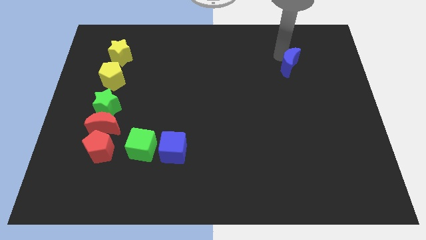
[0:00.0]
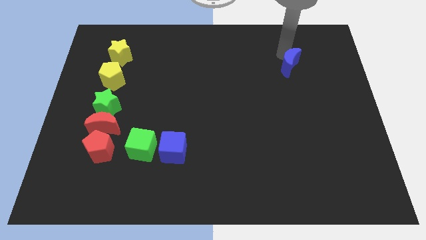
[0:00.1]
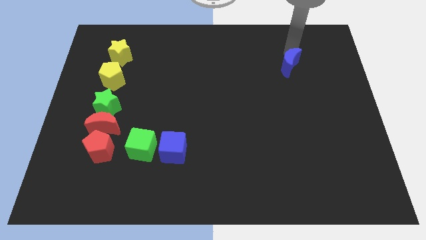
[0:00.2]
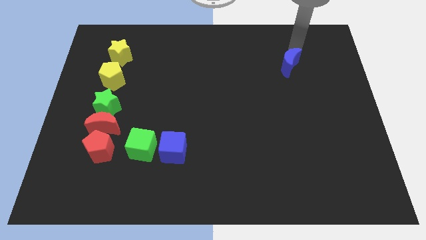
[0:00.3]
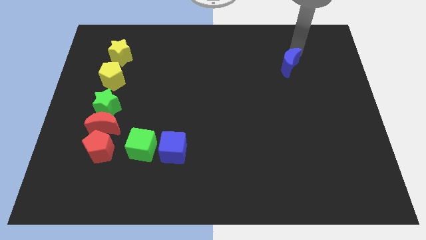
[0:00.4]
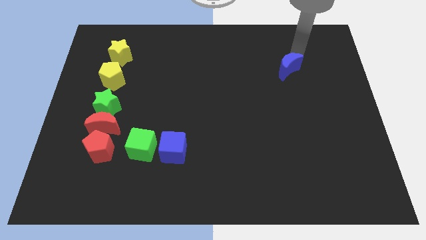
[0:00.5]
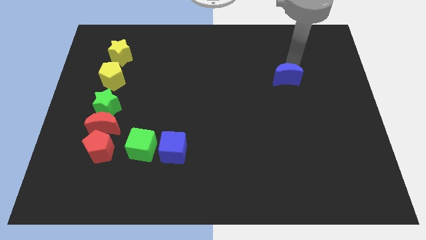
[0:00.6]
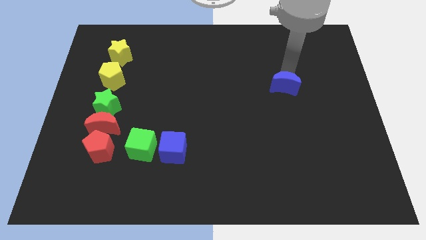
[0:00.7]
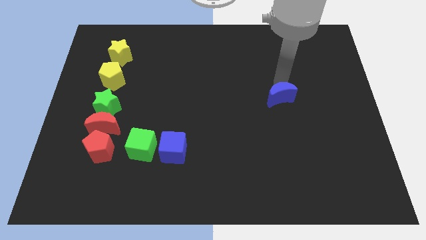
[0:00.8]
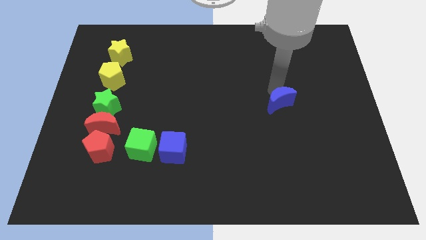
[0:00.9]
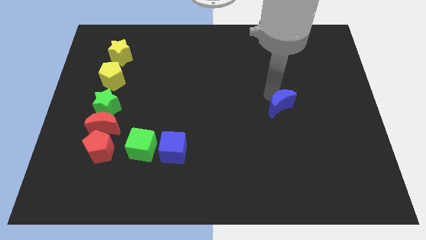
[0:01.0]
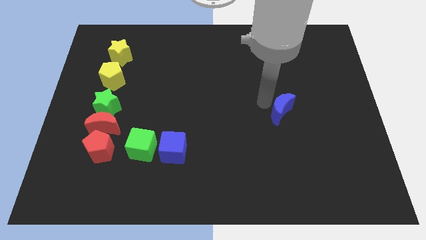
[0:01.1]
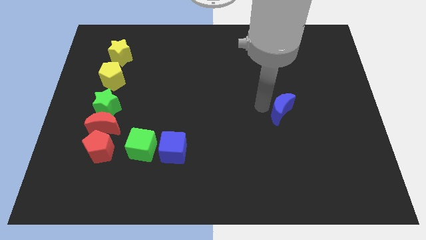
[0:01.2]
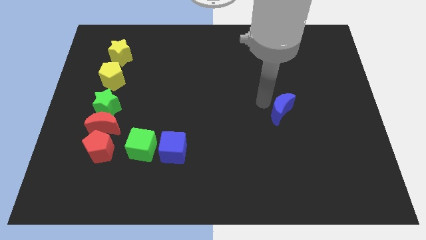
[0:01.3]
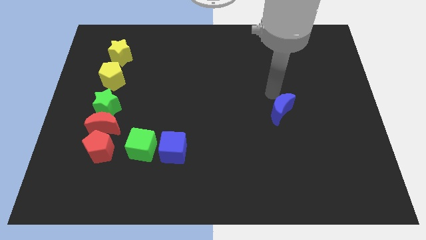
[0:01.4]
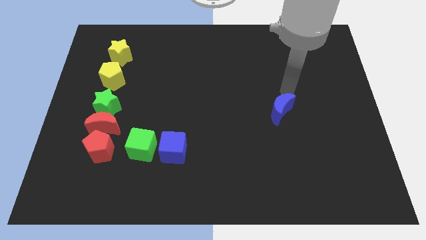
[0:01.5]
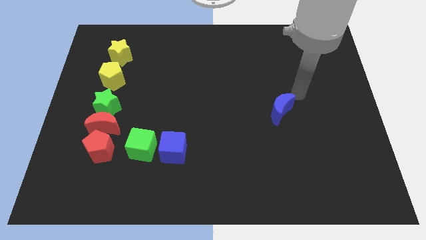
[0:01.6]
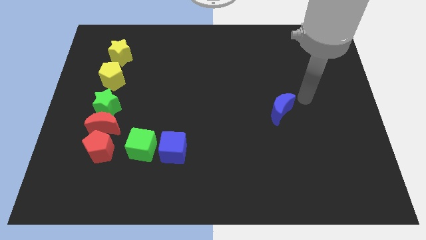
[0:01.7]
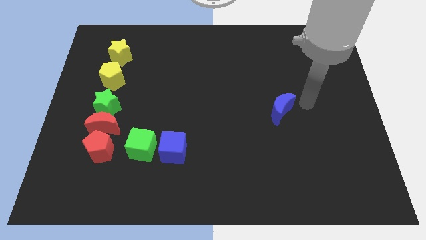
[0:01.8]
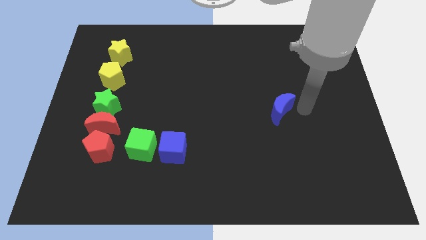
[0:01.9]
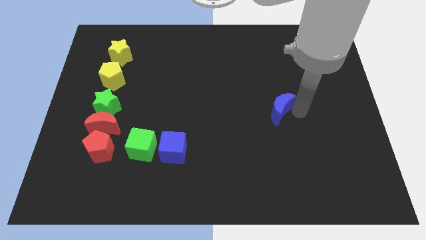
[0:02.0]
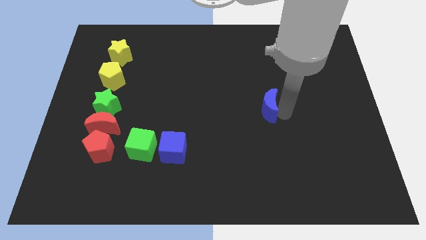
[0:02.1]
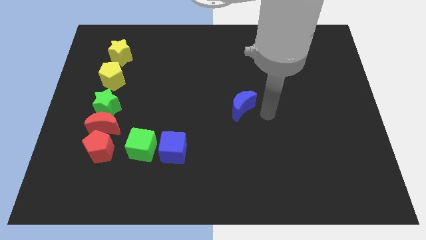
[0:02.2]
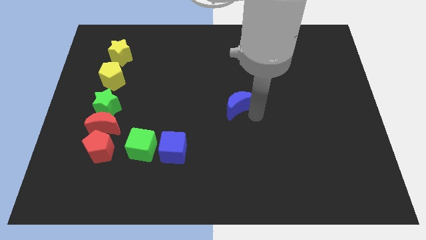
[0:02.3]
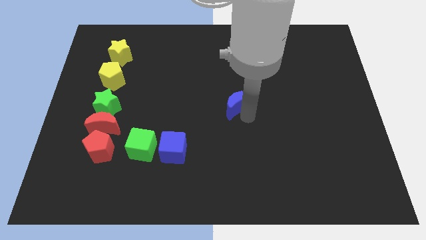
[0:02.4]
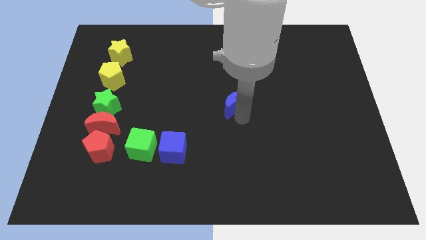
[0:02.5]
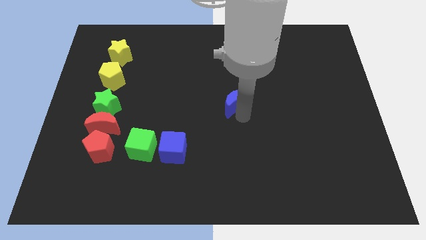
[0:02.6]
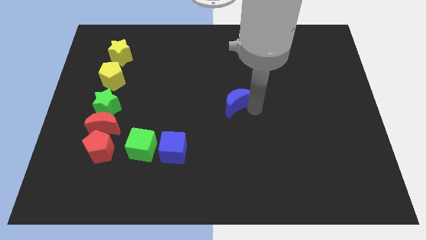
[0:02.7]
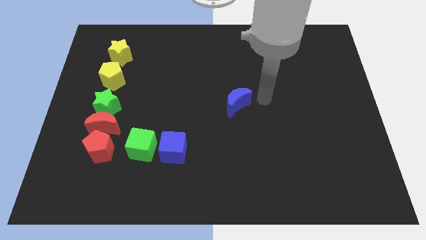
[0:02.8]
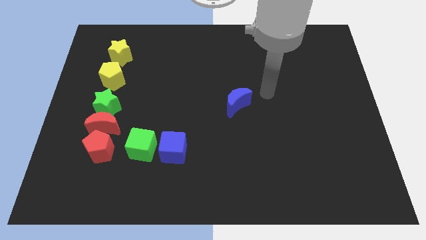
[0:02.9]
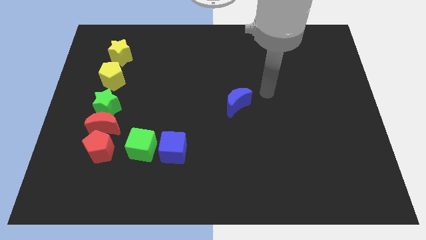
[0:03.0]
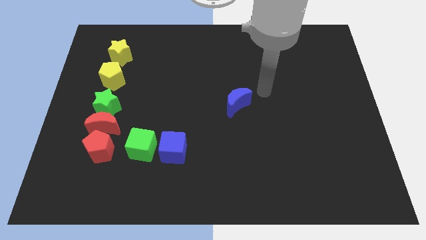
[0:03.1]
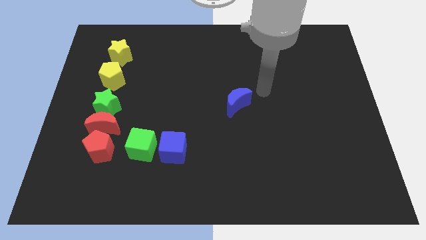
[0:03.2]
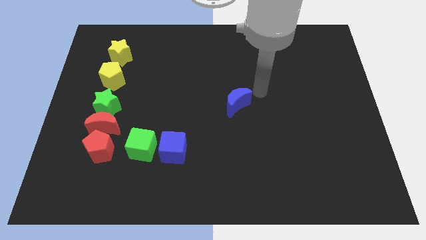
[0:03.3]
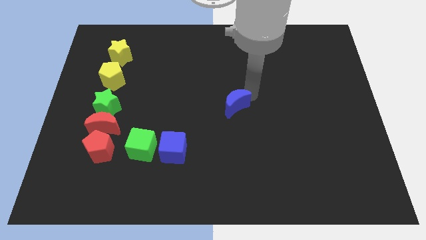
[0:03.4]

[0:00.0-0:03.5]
place the blue moon parallel to the green star

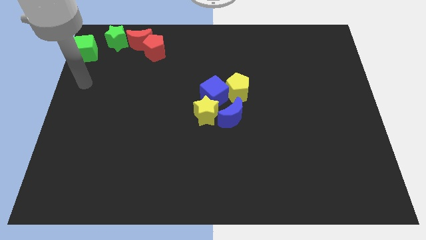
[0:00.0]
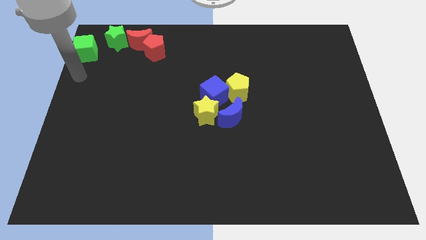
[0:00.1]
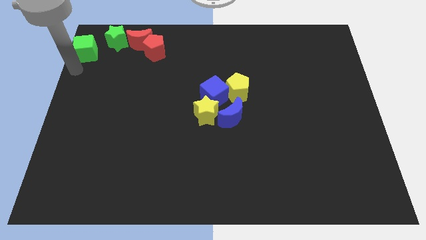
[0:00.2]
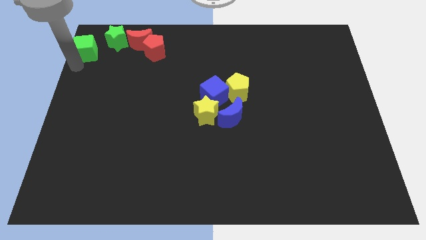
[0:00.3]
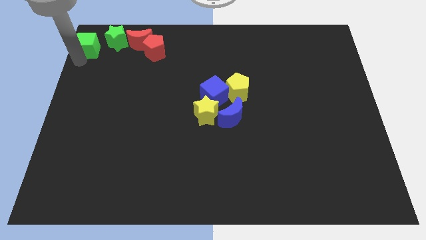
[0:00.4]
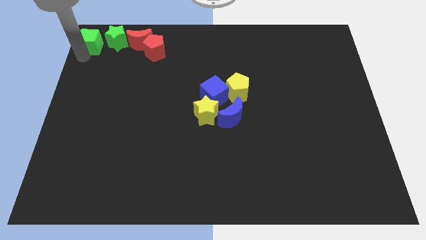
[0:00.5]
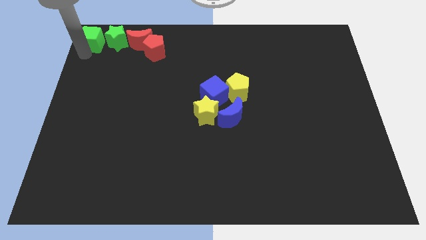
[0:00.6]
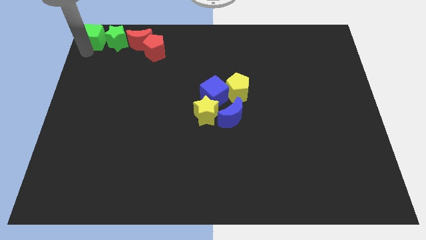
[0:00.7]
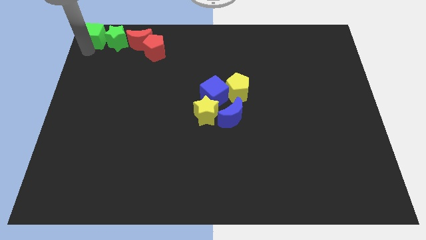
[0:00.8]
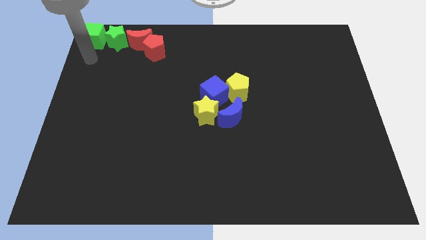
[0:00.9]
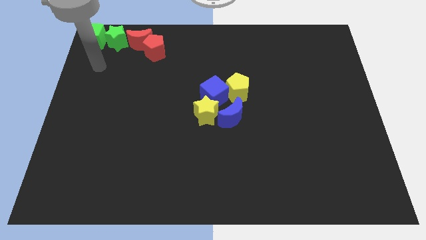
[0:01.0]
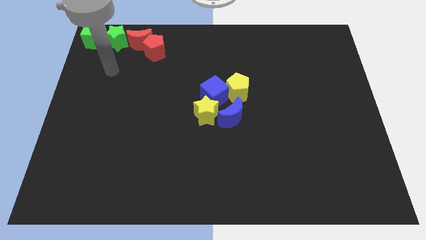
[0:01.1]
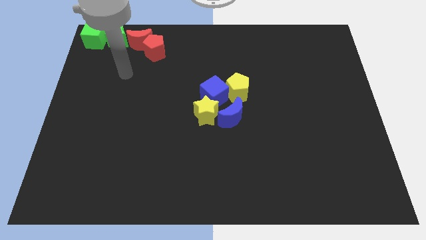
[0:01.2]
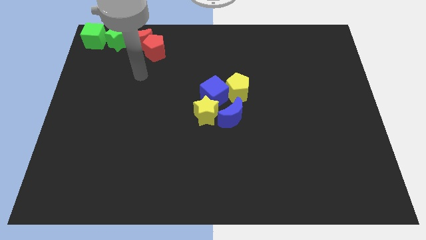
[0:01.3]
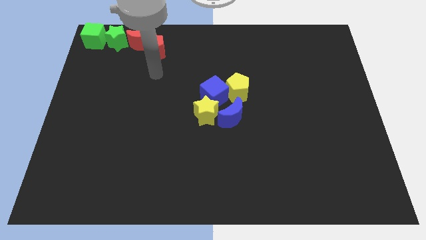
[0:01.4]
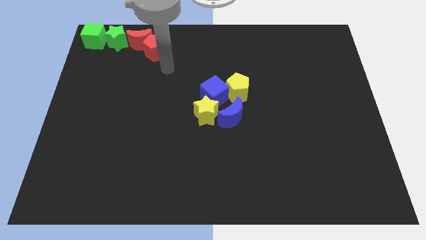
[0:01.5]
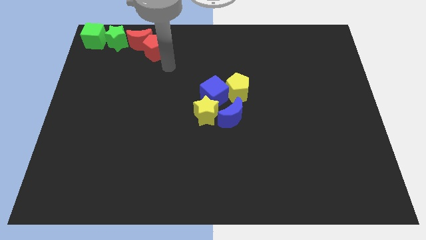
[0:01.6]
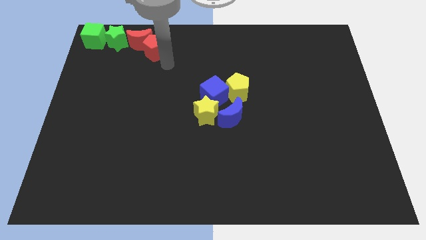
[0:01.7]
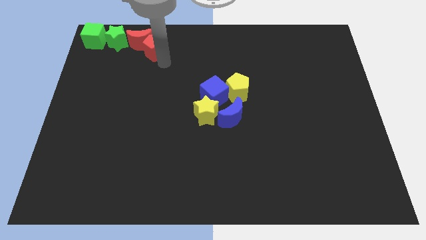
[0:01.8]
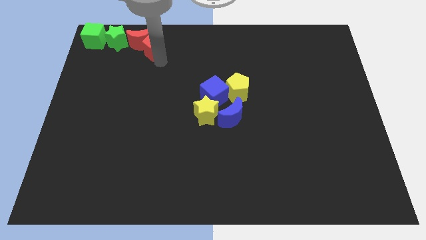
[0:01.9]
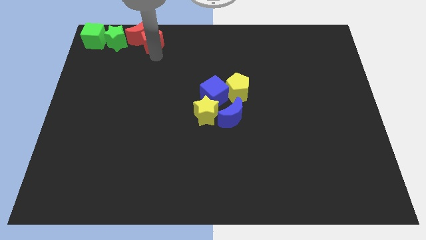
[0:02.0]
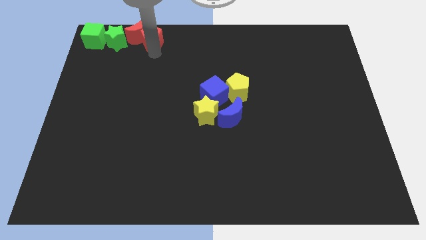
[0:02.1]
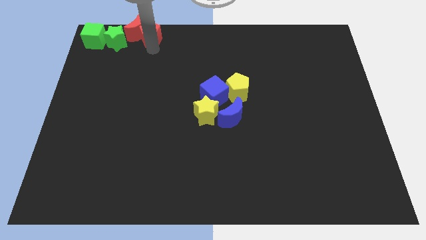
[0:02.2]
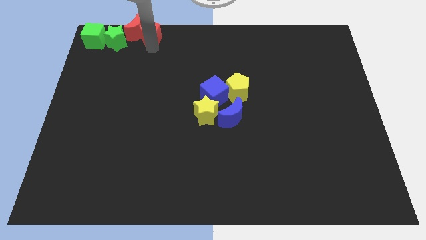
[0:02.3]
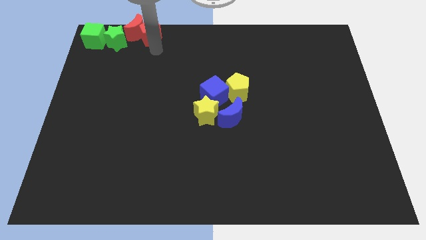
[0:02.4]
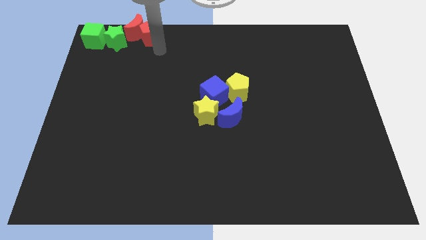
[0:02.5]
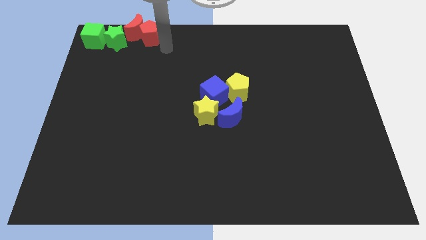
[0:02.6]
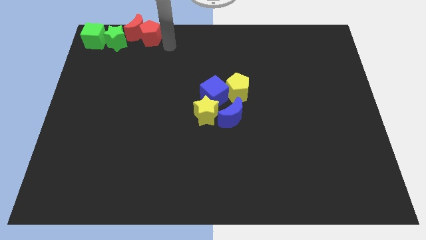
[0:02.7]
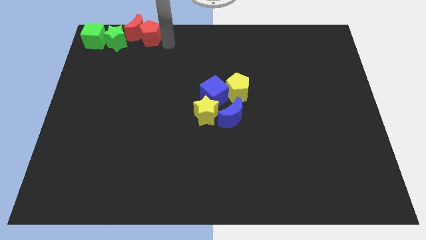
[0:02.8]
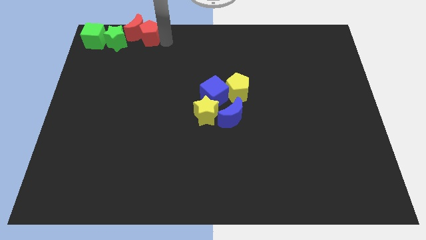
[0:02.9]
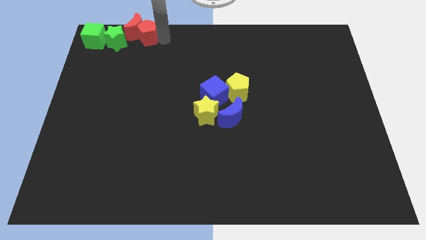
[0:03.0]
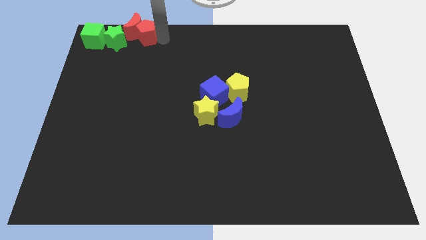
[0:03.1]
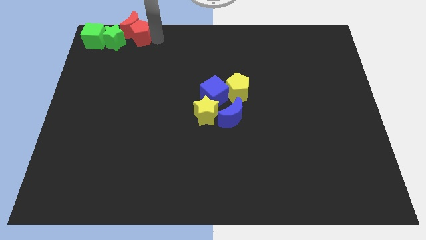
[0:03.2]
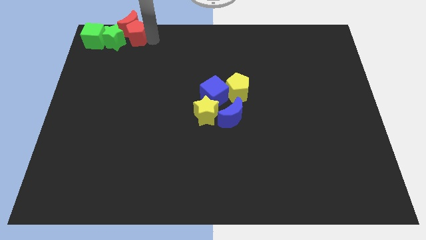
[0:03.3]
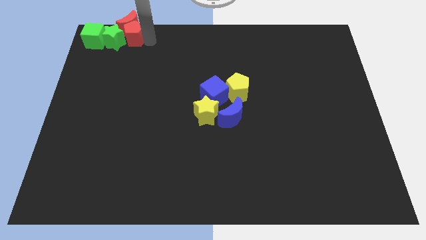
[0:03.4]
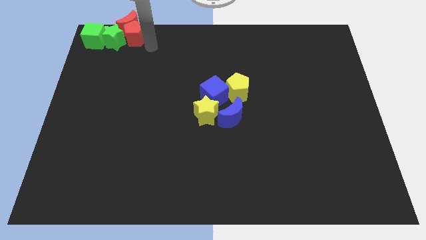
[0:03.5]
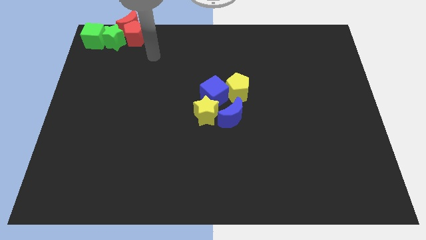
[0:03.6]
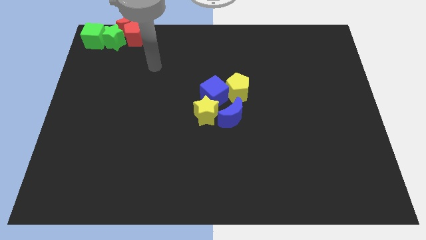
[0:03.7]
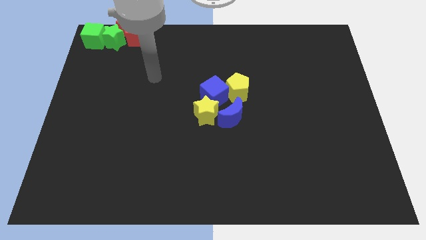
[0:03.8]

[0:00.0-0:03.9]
move the green and red blocks to the top left corner of the board

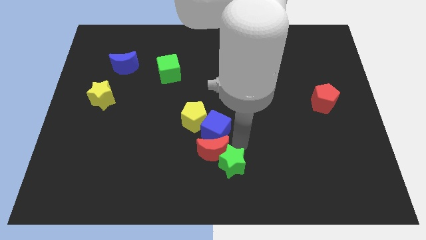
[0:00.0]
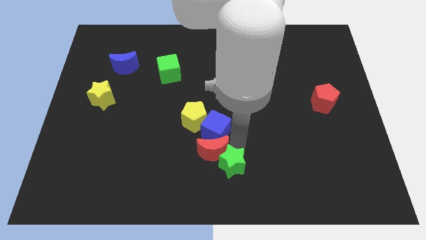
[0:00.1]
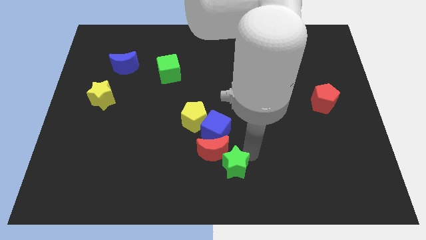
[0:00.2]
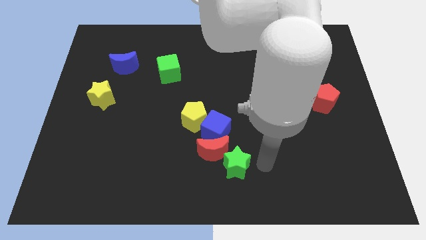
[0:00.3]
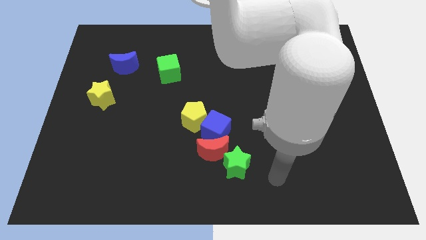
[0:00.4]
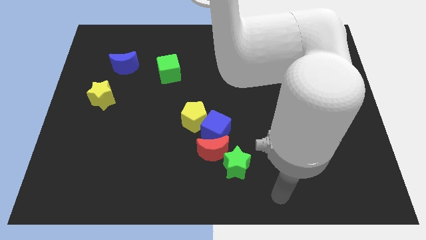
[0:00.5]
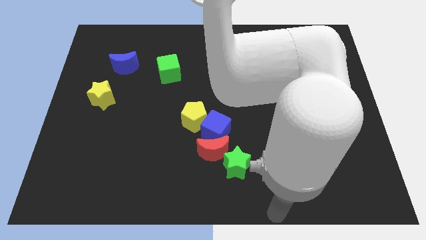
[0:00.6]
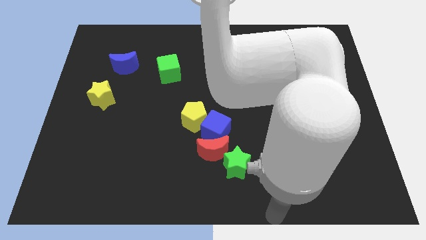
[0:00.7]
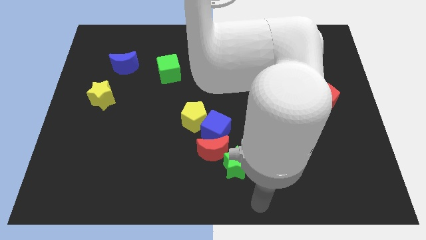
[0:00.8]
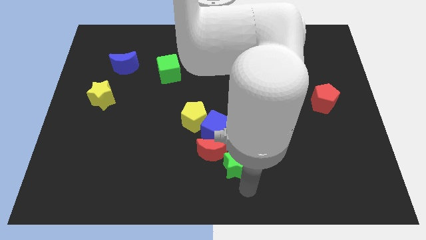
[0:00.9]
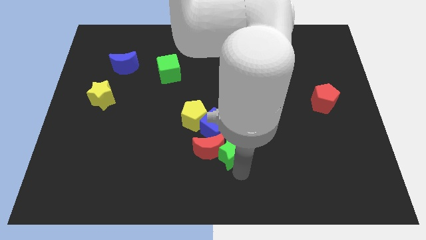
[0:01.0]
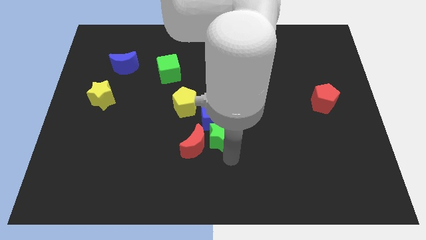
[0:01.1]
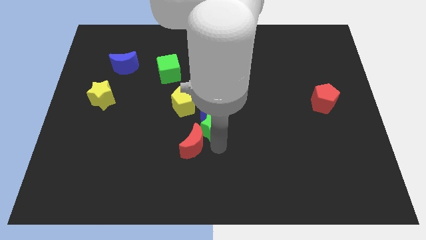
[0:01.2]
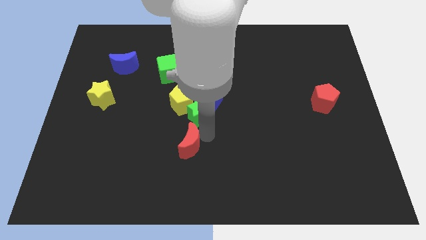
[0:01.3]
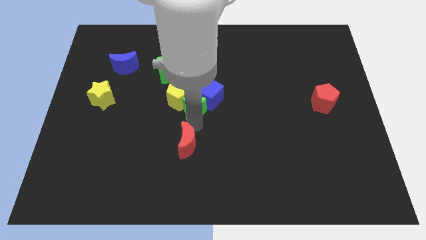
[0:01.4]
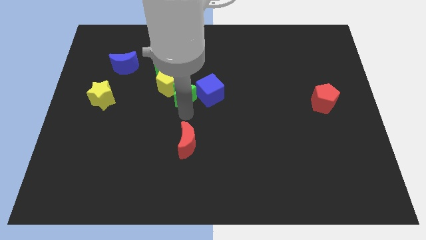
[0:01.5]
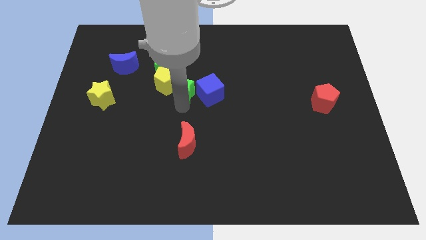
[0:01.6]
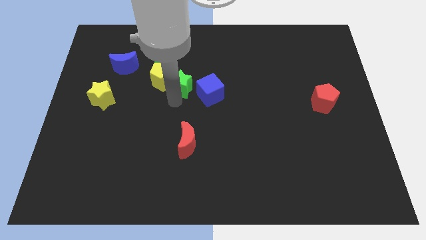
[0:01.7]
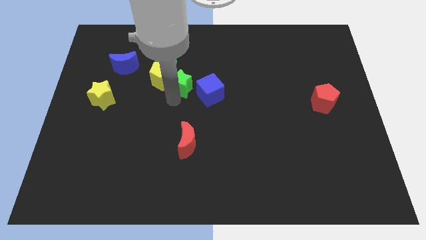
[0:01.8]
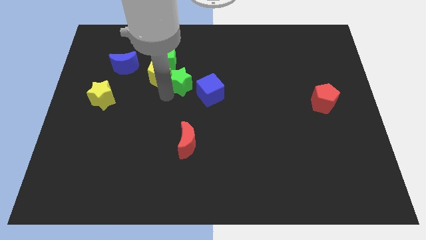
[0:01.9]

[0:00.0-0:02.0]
push the green star between blue cube and yellow pentagon
